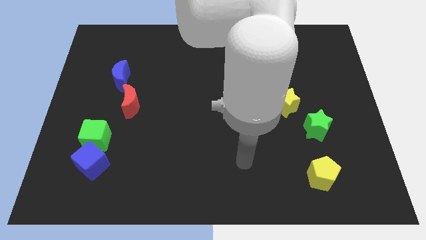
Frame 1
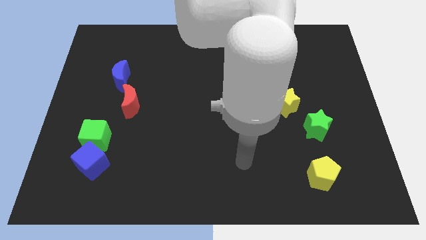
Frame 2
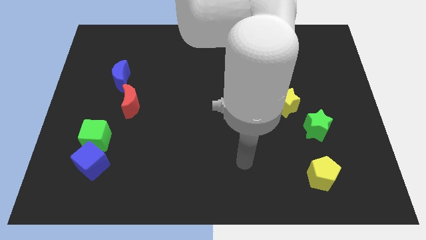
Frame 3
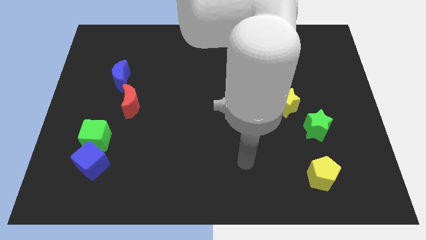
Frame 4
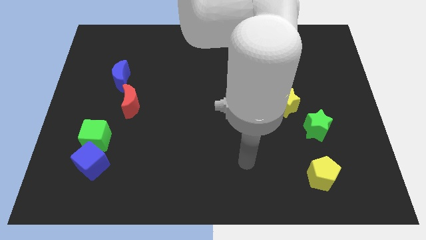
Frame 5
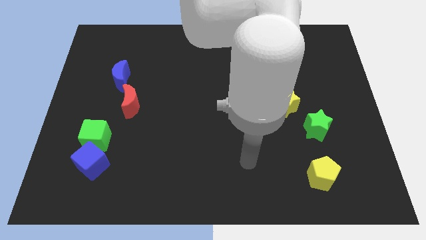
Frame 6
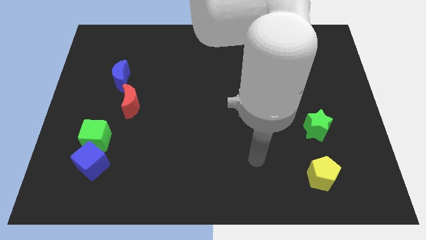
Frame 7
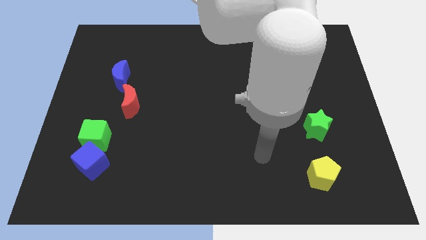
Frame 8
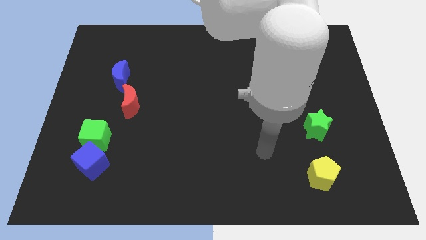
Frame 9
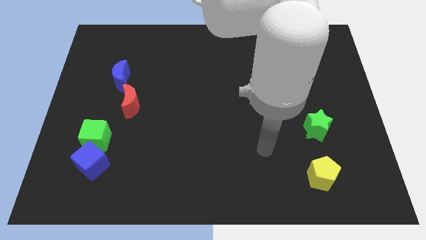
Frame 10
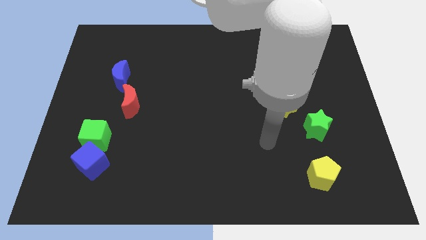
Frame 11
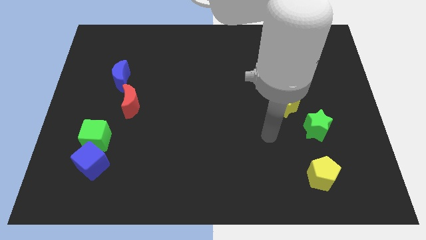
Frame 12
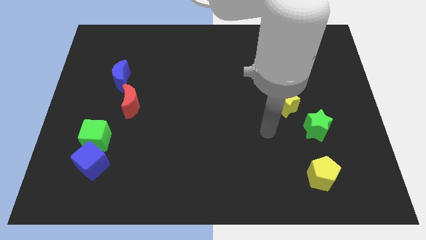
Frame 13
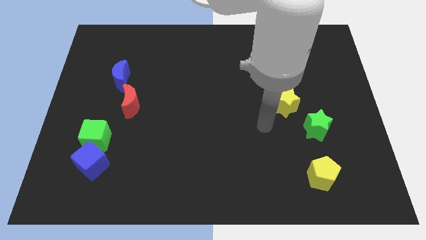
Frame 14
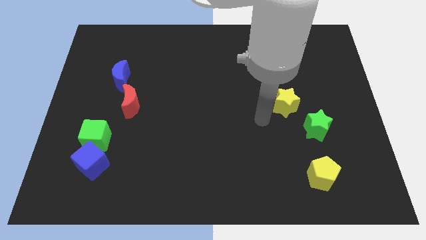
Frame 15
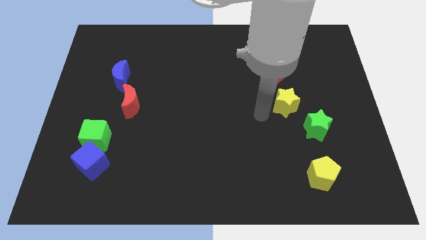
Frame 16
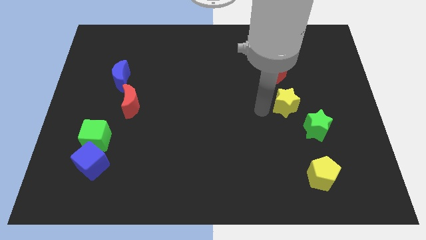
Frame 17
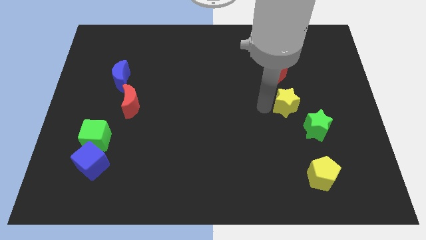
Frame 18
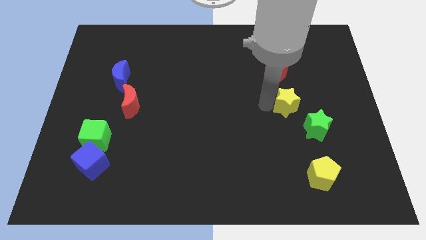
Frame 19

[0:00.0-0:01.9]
place your arm to the left of yellow star

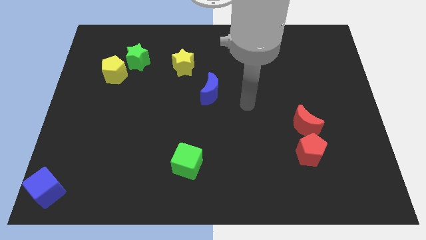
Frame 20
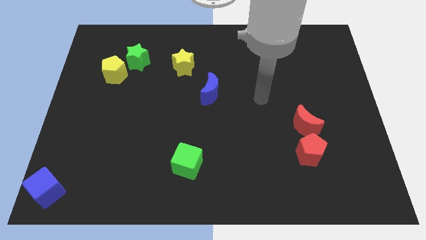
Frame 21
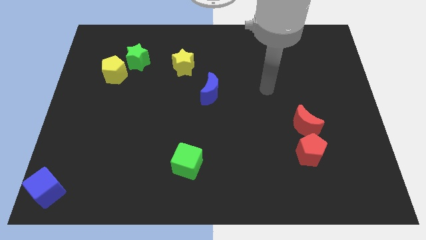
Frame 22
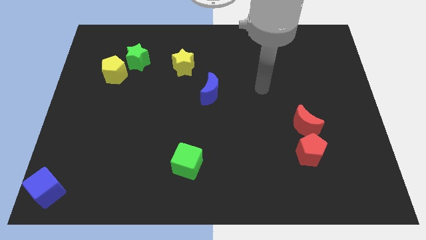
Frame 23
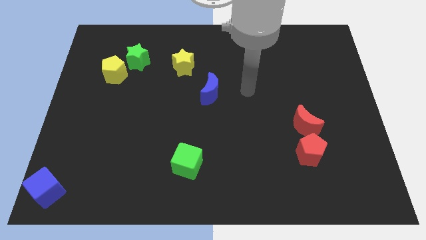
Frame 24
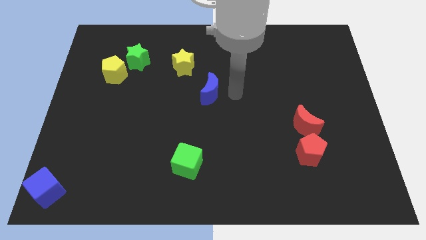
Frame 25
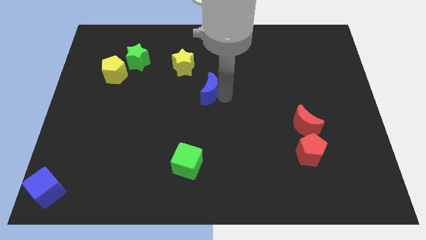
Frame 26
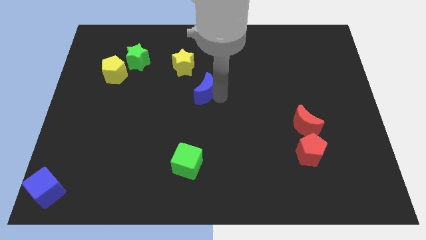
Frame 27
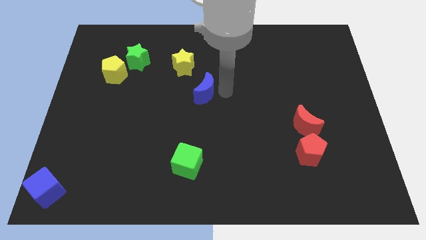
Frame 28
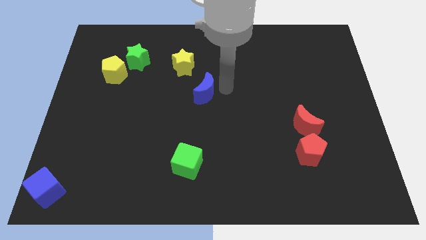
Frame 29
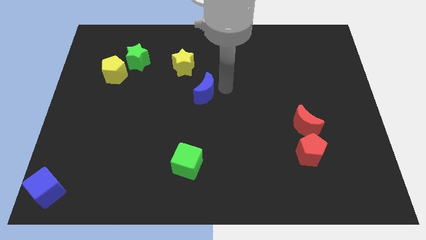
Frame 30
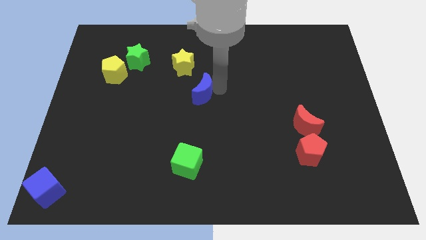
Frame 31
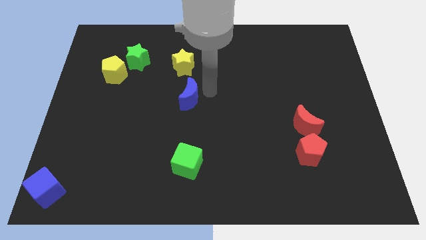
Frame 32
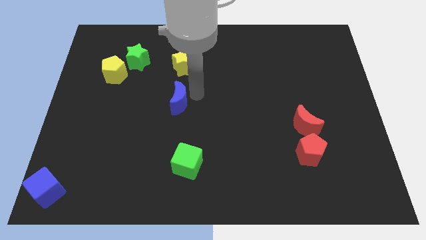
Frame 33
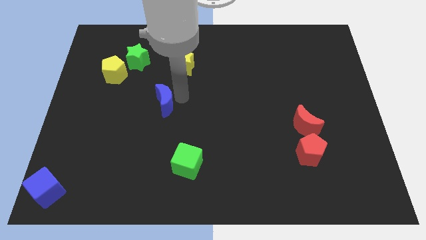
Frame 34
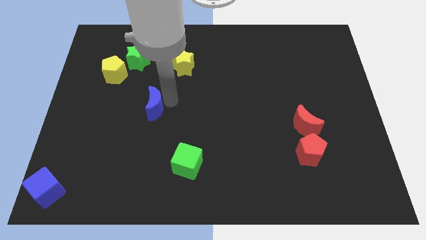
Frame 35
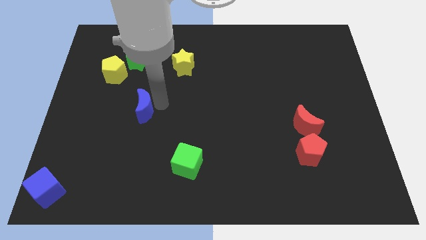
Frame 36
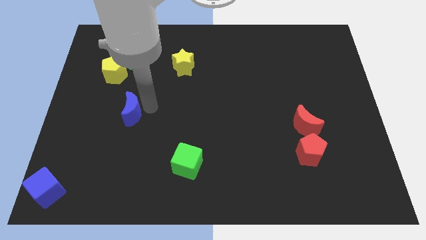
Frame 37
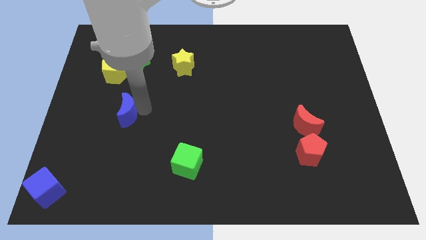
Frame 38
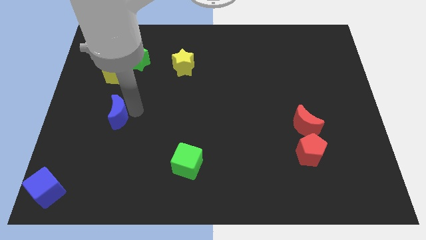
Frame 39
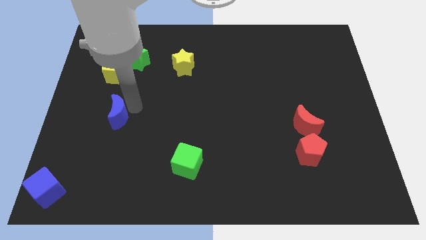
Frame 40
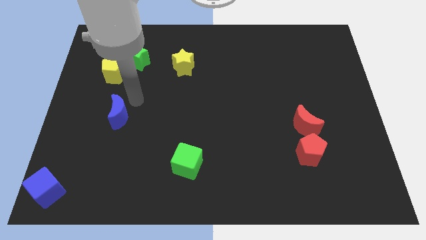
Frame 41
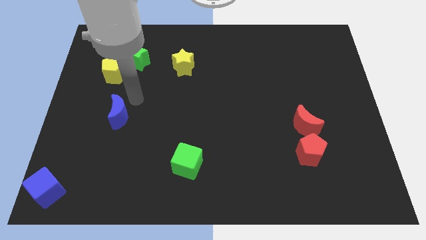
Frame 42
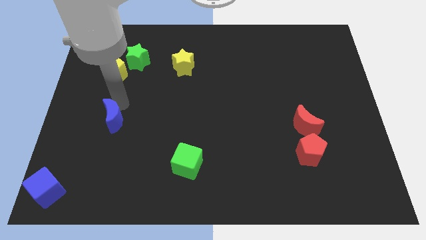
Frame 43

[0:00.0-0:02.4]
place the blue crescent below the yellow pentagon

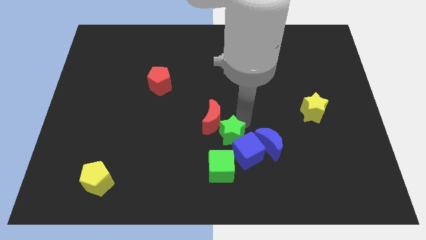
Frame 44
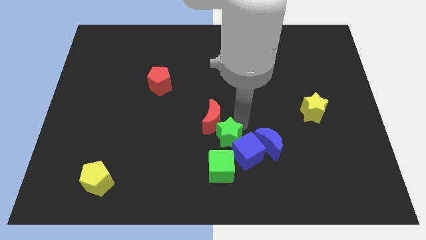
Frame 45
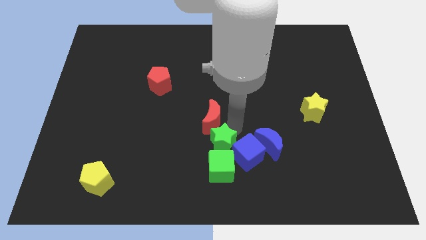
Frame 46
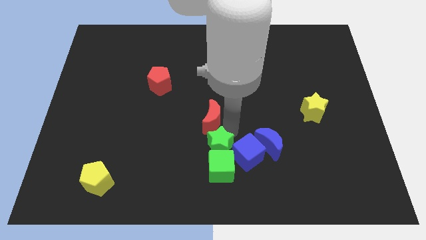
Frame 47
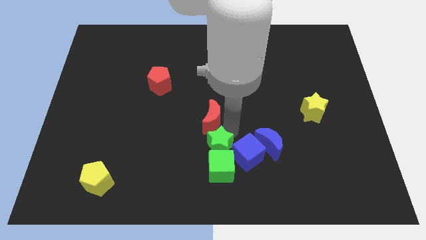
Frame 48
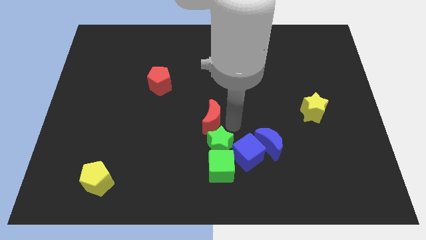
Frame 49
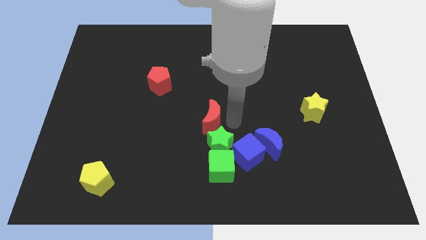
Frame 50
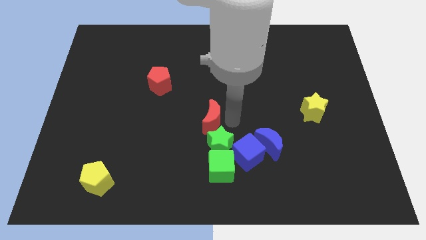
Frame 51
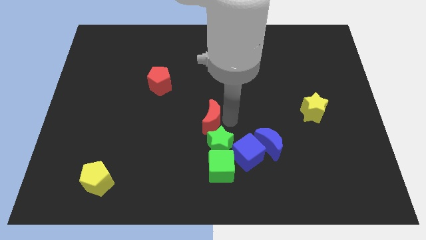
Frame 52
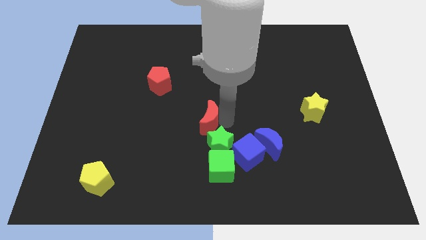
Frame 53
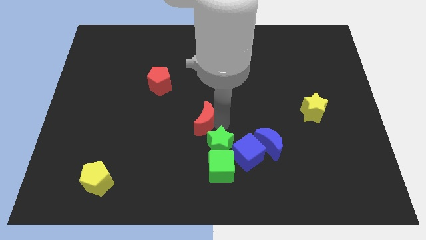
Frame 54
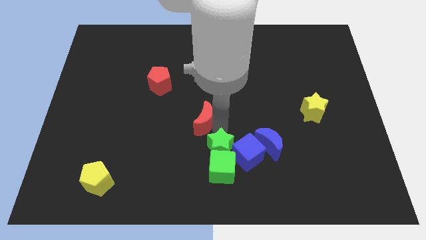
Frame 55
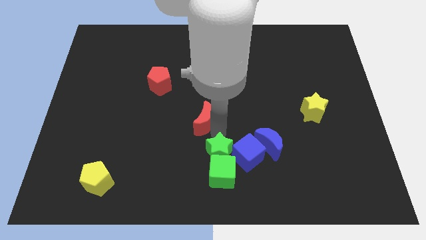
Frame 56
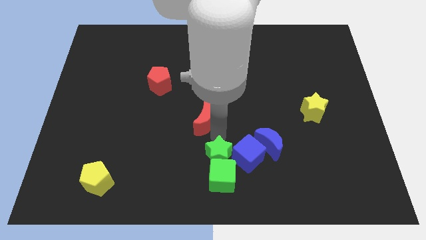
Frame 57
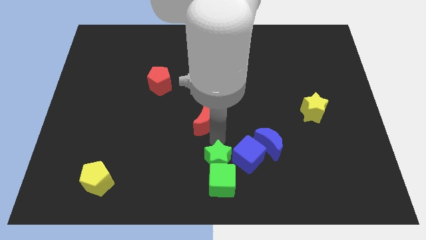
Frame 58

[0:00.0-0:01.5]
move the green star into the green cube

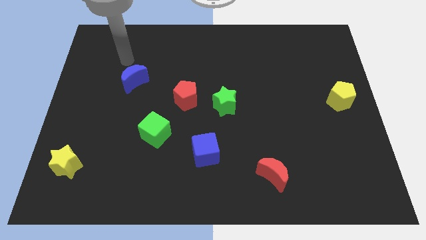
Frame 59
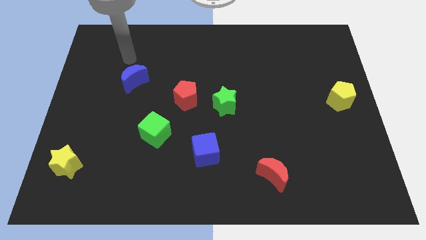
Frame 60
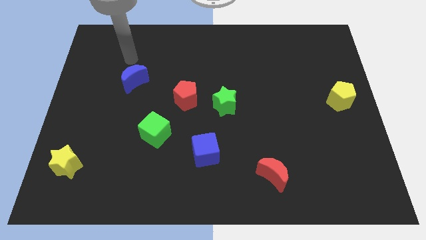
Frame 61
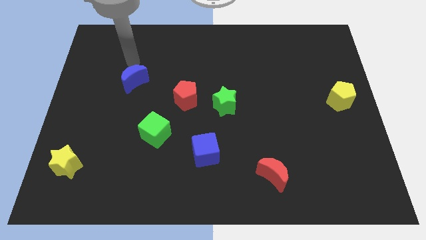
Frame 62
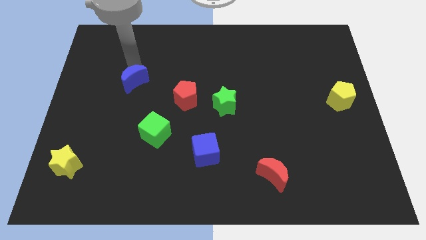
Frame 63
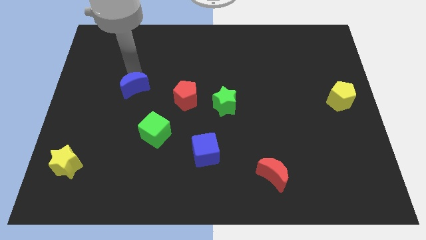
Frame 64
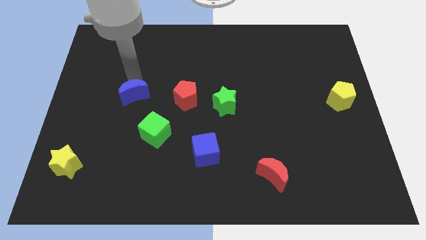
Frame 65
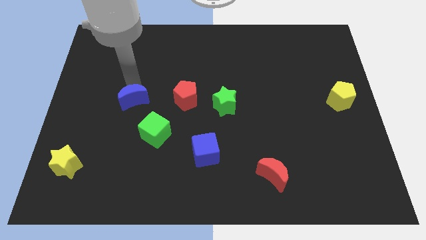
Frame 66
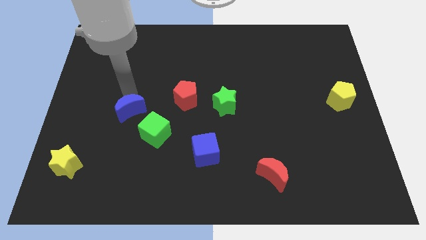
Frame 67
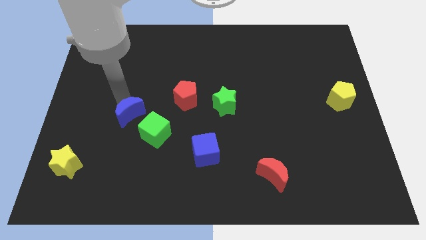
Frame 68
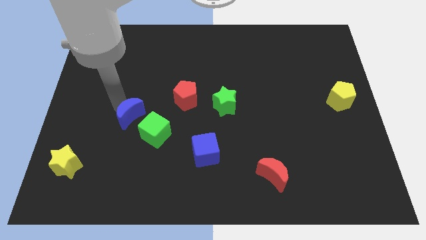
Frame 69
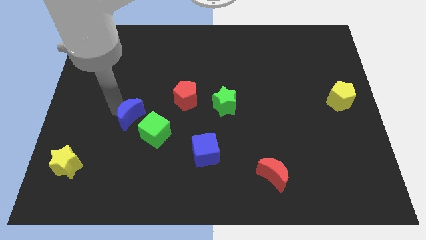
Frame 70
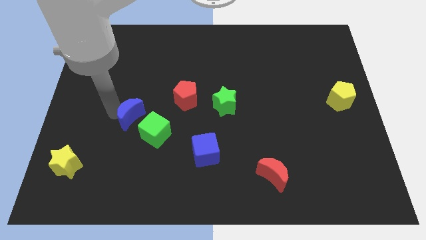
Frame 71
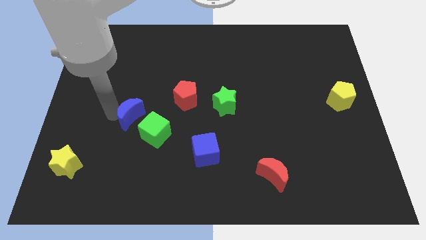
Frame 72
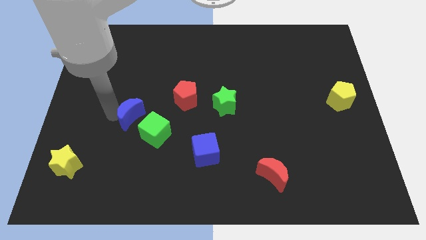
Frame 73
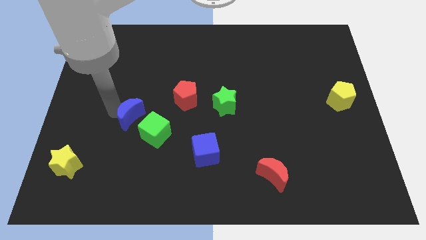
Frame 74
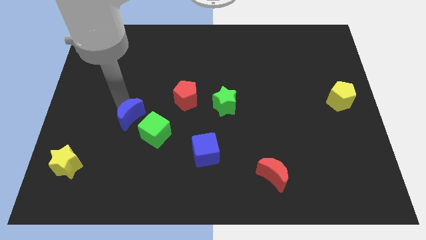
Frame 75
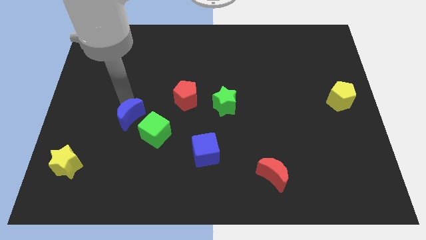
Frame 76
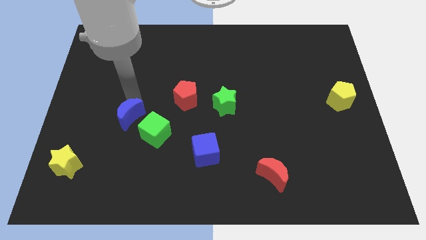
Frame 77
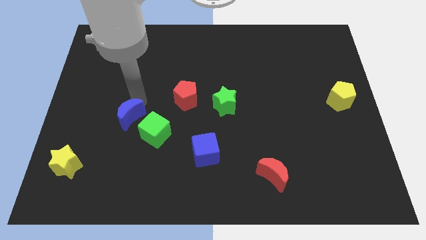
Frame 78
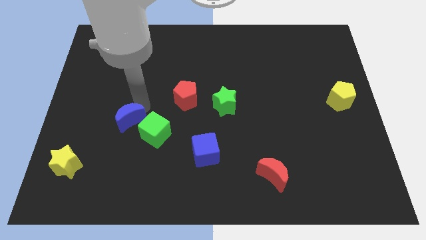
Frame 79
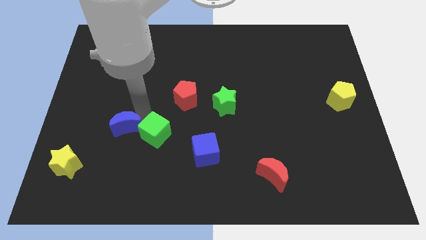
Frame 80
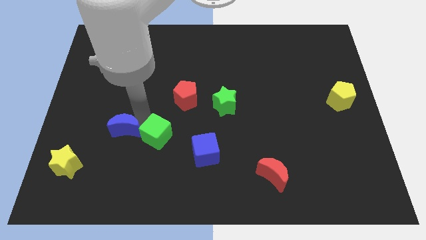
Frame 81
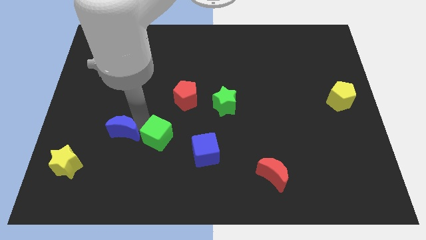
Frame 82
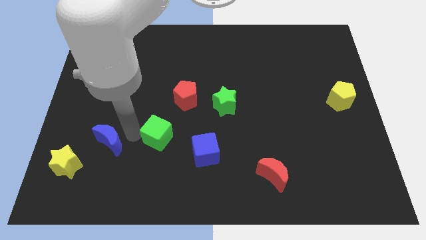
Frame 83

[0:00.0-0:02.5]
move the blue crescent to the left of green cube

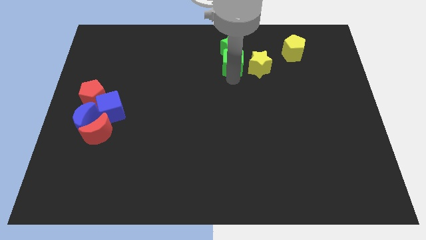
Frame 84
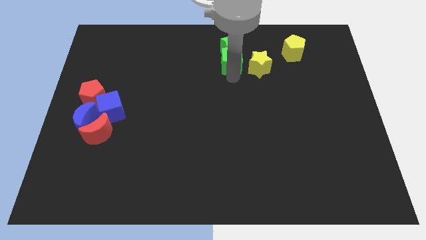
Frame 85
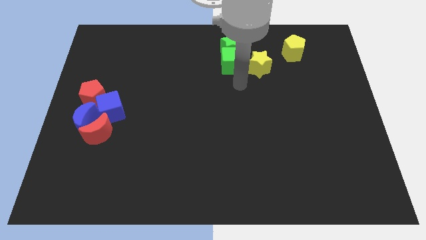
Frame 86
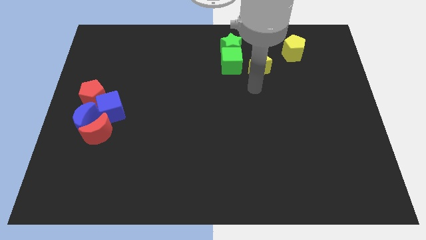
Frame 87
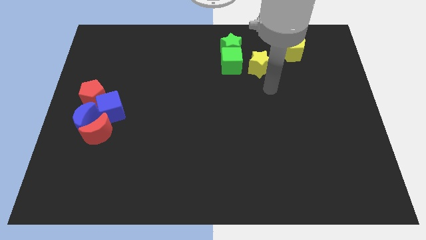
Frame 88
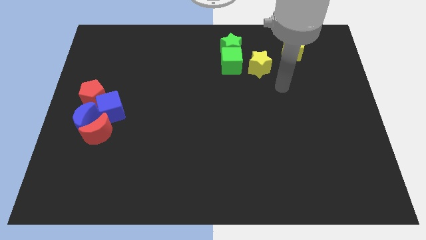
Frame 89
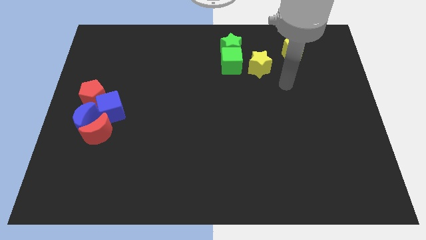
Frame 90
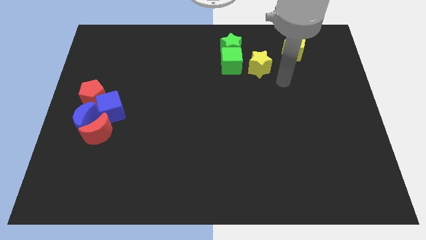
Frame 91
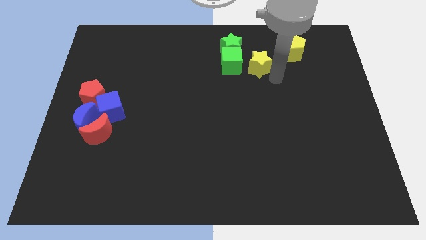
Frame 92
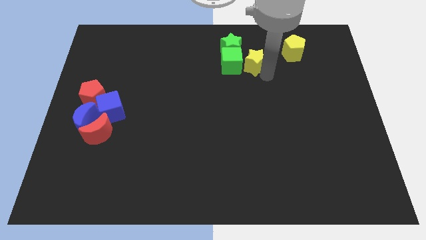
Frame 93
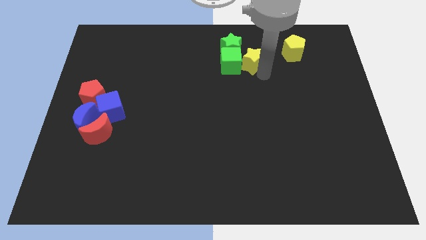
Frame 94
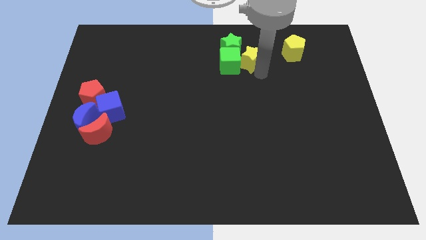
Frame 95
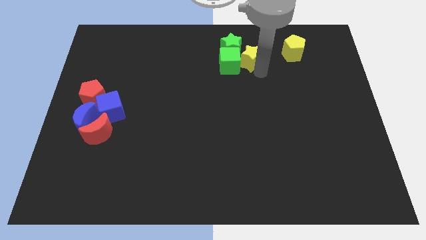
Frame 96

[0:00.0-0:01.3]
push the yellow star into the left side of the green cube
